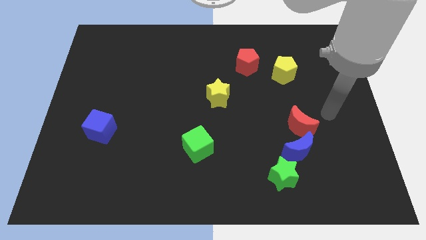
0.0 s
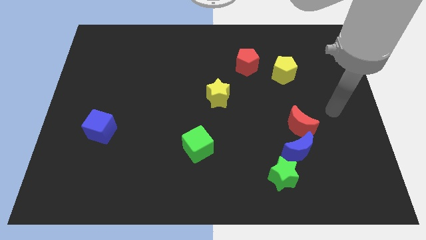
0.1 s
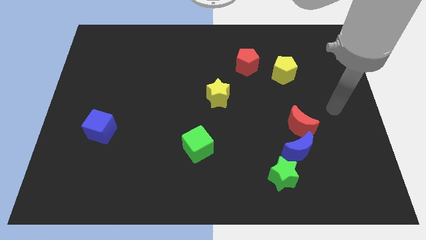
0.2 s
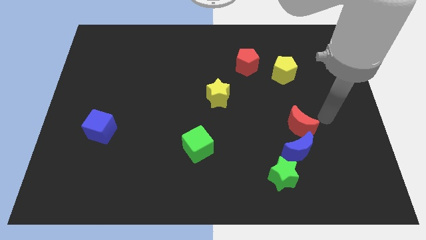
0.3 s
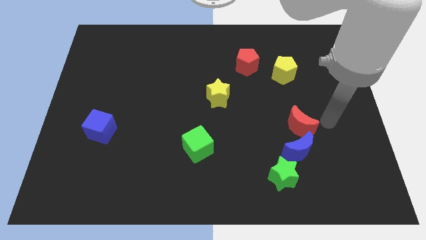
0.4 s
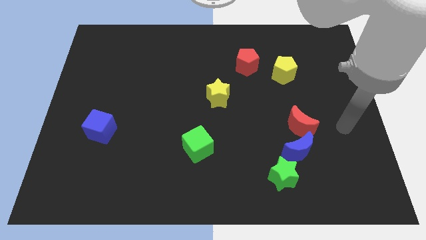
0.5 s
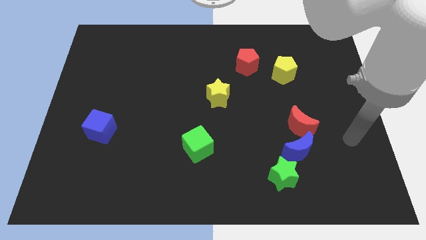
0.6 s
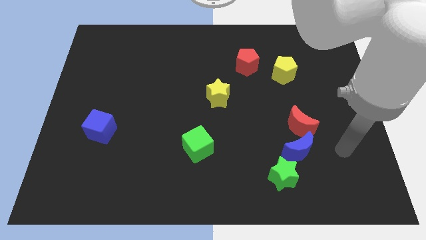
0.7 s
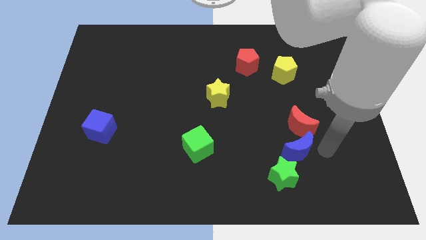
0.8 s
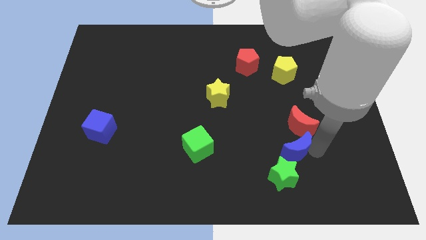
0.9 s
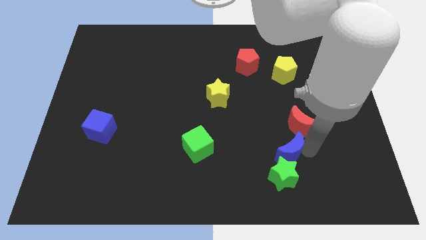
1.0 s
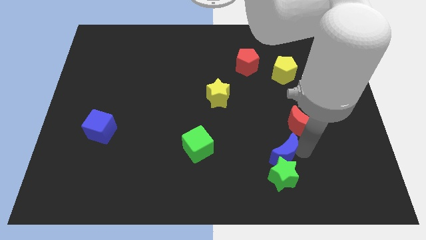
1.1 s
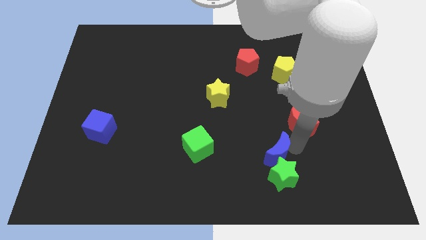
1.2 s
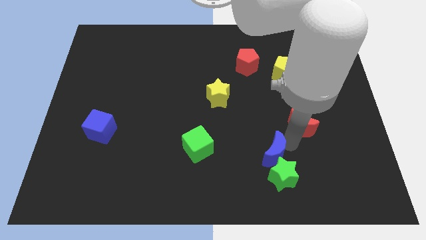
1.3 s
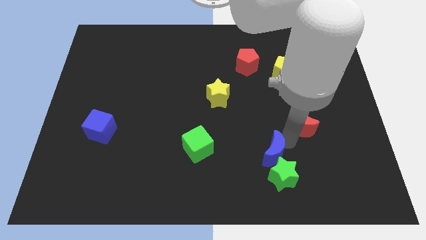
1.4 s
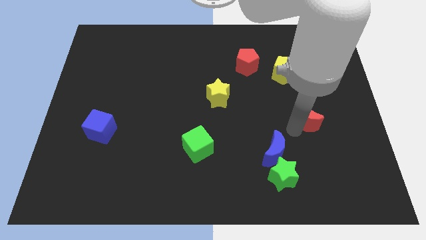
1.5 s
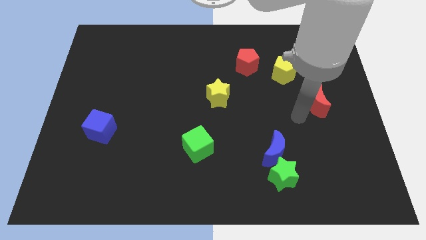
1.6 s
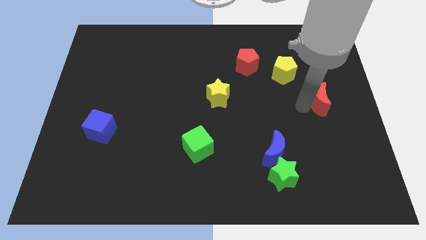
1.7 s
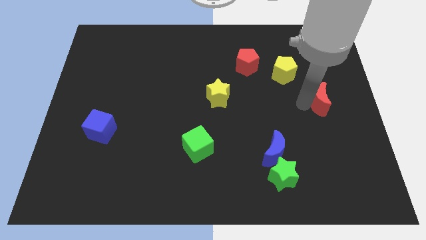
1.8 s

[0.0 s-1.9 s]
separate the red crescent from blue crescent

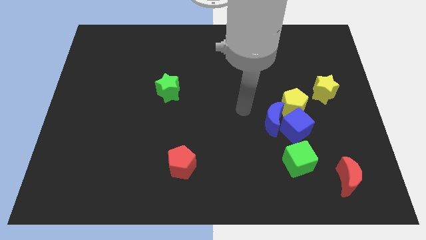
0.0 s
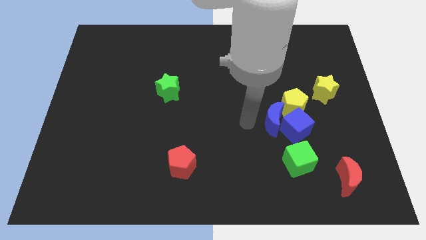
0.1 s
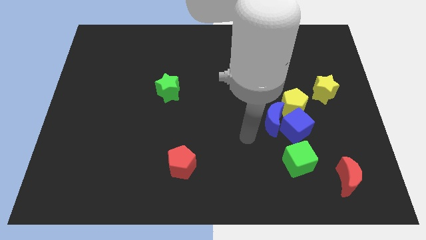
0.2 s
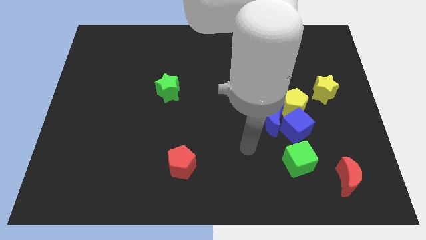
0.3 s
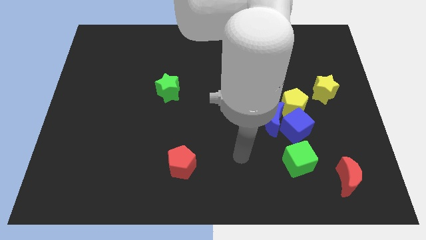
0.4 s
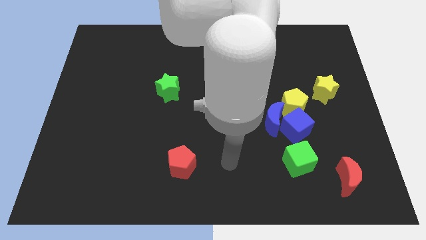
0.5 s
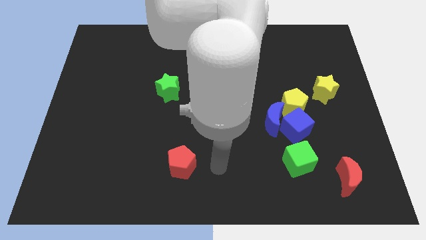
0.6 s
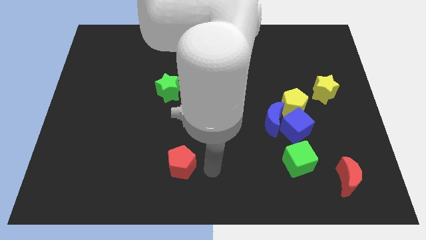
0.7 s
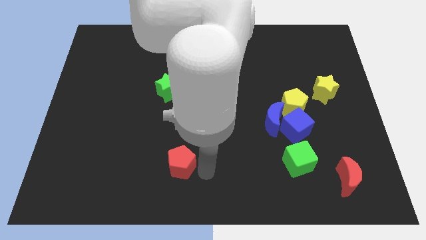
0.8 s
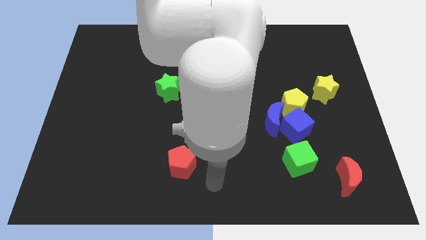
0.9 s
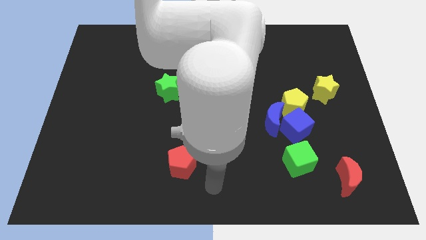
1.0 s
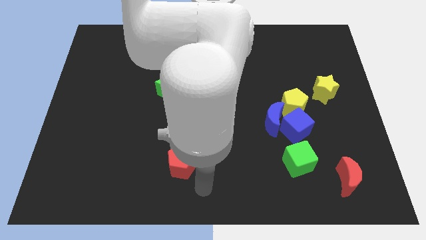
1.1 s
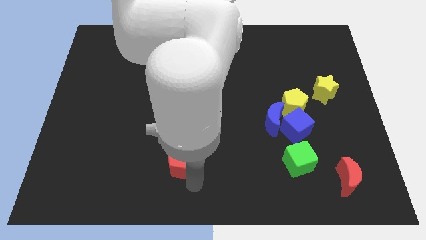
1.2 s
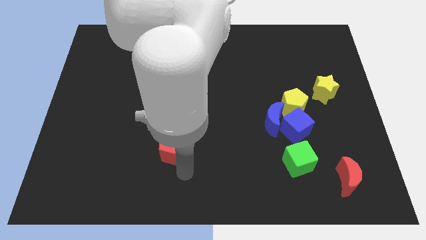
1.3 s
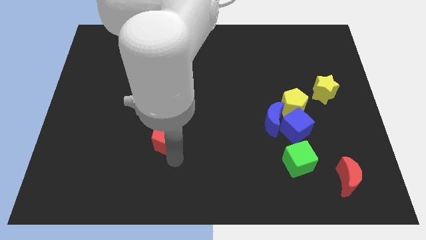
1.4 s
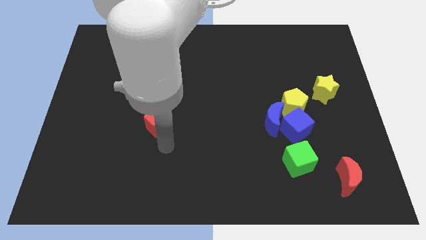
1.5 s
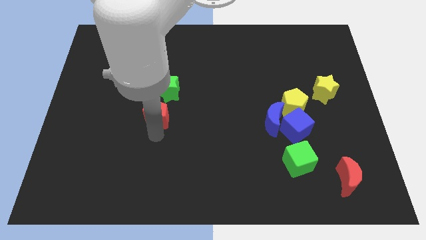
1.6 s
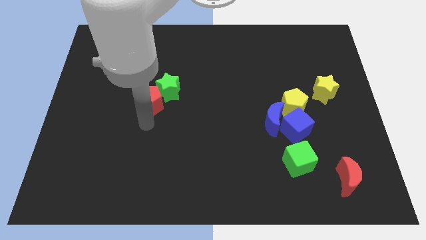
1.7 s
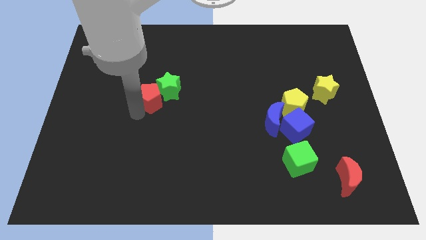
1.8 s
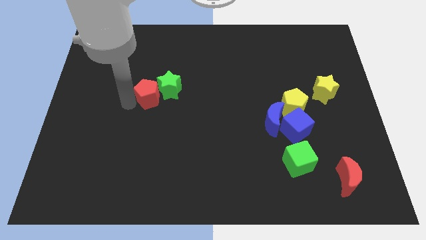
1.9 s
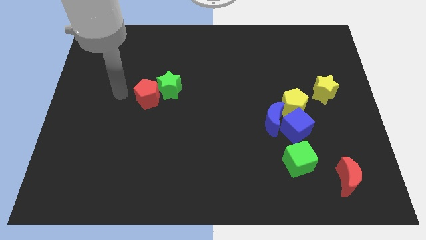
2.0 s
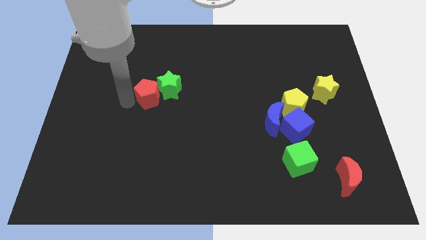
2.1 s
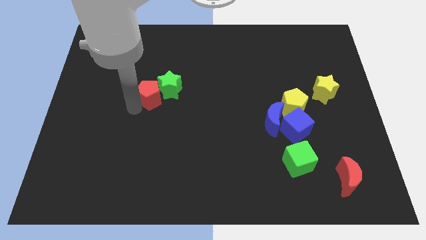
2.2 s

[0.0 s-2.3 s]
push red pentagon in to green star

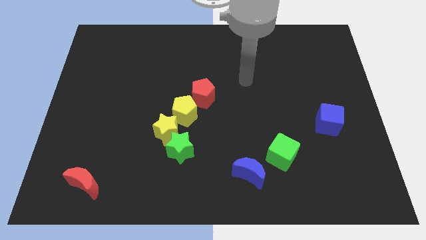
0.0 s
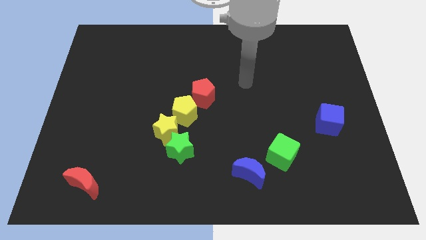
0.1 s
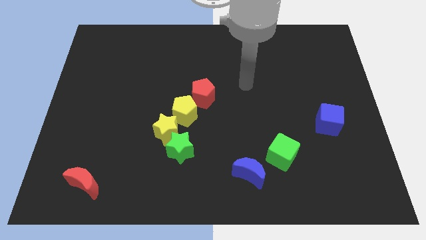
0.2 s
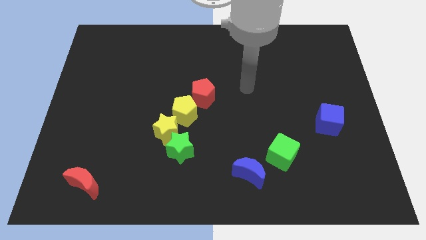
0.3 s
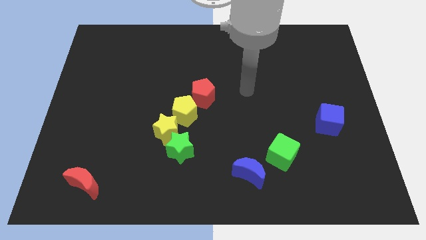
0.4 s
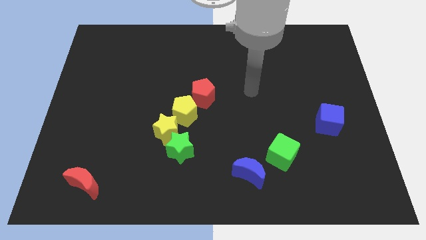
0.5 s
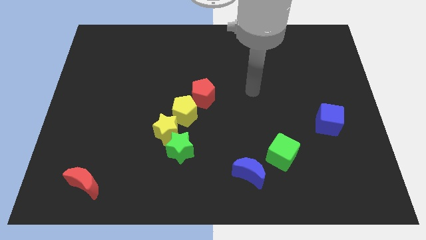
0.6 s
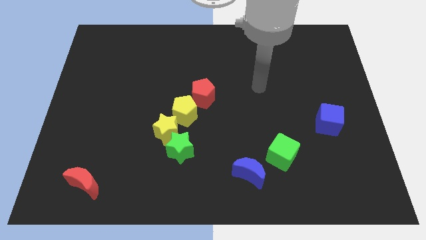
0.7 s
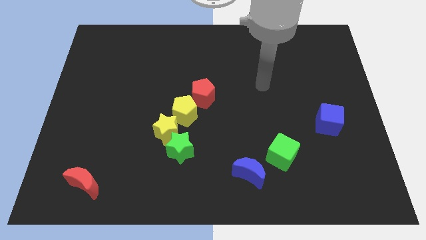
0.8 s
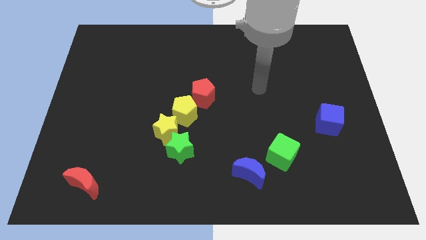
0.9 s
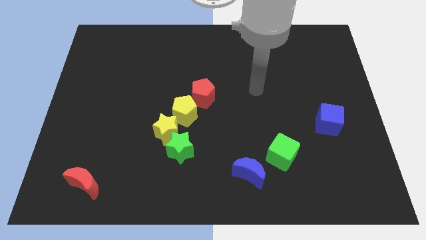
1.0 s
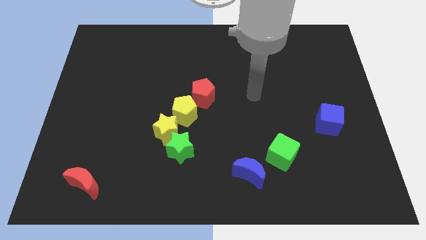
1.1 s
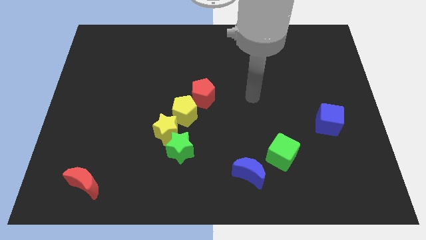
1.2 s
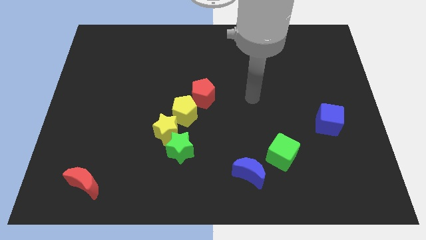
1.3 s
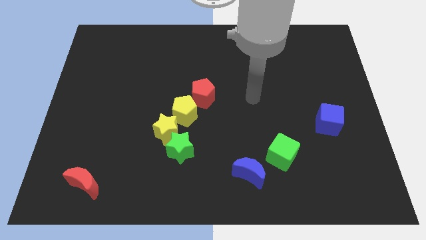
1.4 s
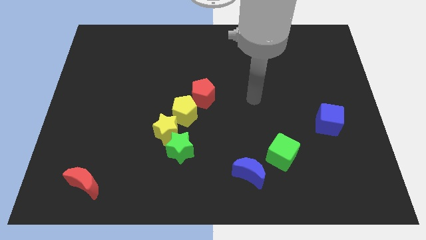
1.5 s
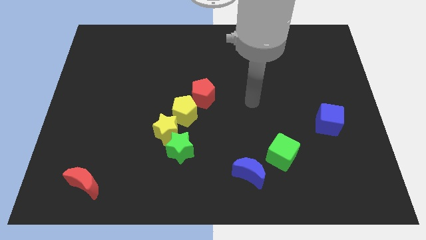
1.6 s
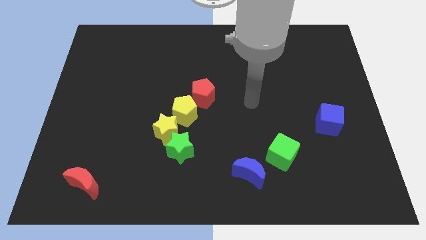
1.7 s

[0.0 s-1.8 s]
point your arm at the right side of the red pentagon

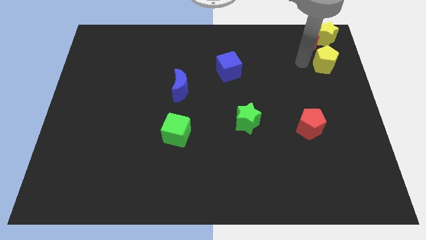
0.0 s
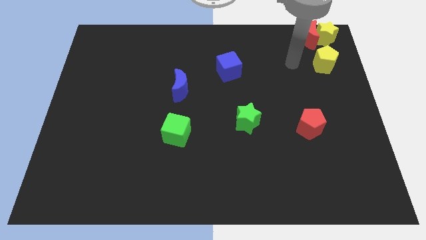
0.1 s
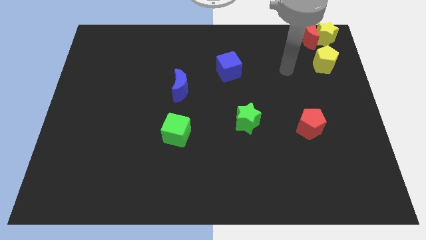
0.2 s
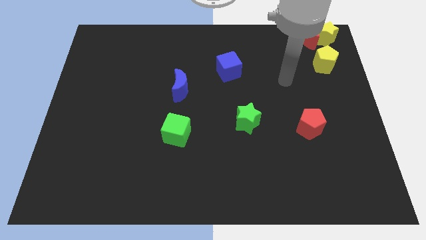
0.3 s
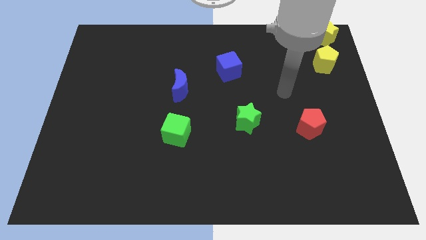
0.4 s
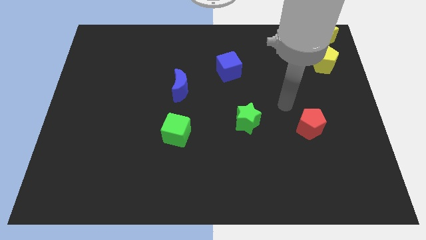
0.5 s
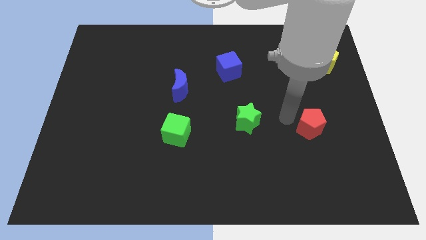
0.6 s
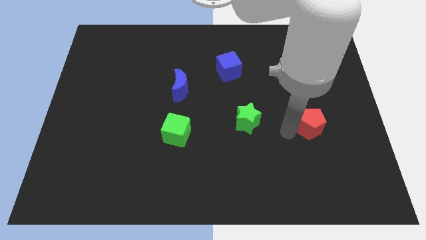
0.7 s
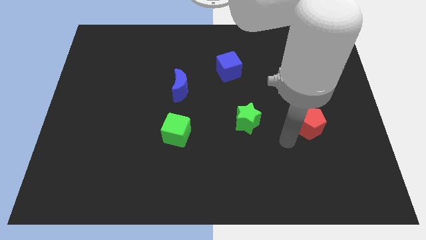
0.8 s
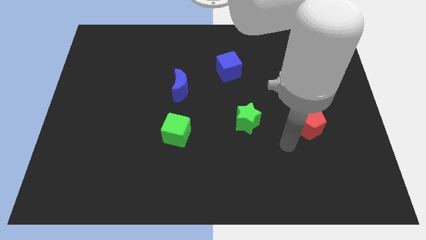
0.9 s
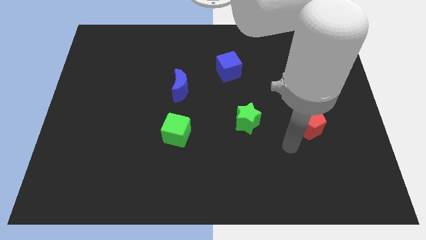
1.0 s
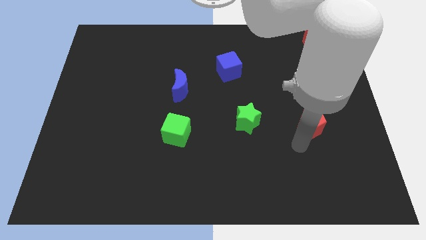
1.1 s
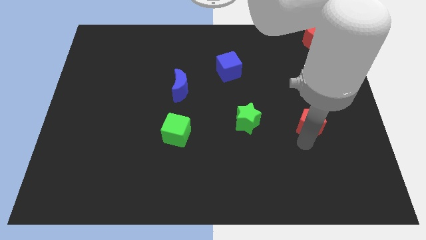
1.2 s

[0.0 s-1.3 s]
move your arm away from yellow pemtagon

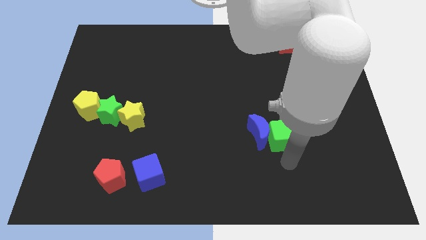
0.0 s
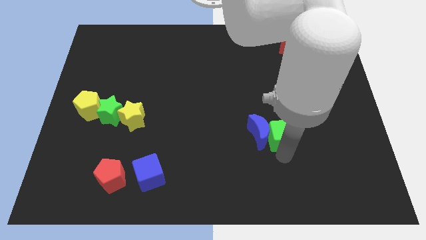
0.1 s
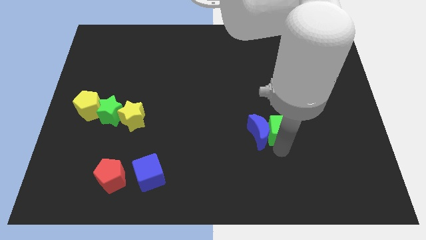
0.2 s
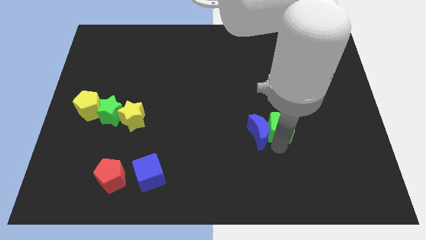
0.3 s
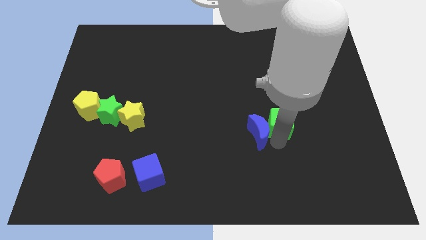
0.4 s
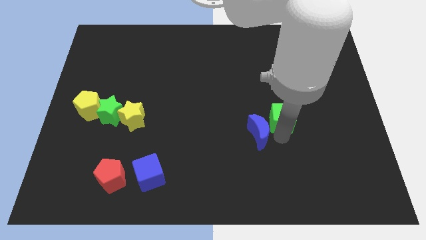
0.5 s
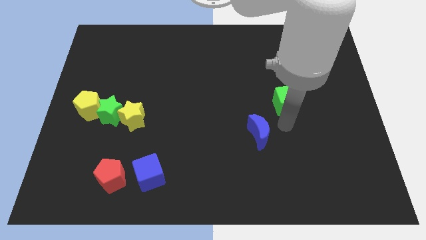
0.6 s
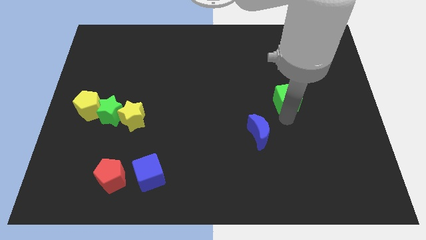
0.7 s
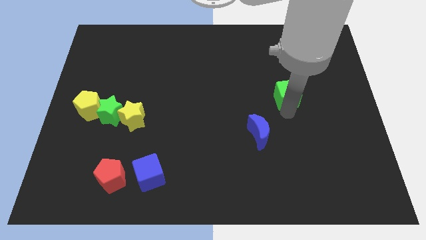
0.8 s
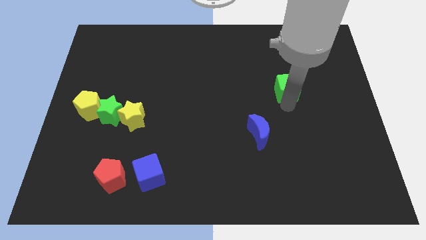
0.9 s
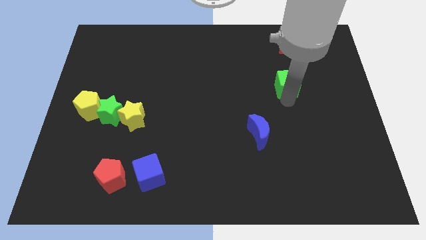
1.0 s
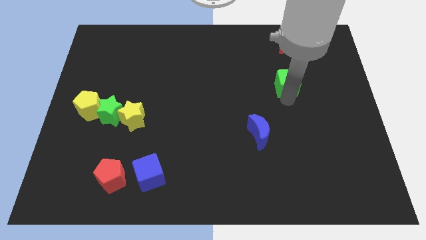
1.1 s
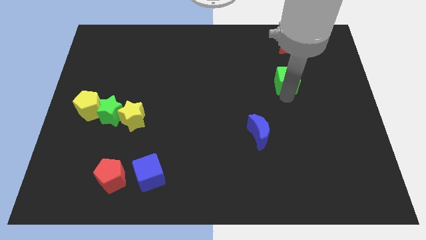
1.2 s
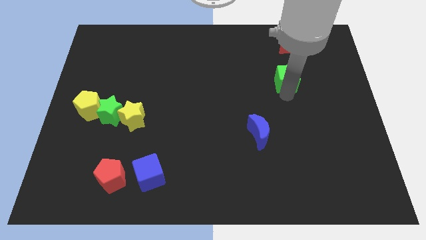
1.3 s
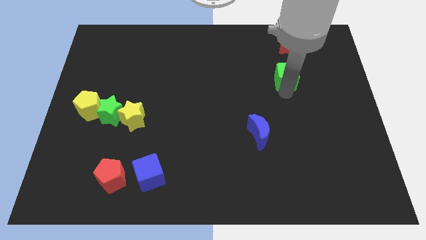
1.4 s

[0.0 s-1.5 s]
push the green cube towards the red crescent
